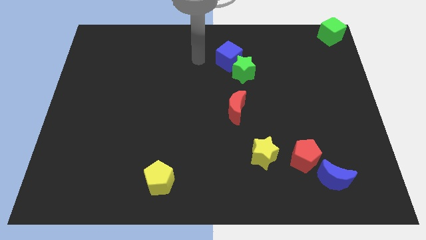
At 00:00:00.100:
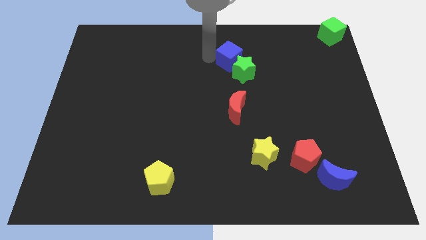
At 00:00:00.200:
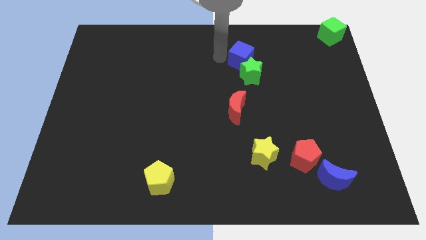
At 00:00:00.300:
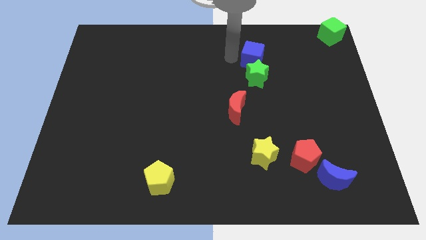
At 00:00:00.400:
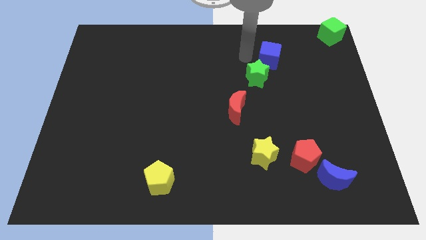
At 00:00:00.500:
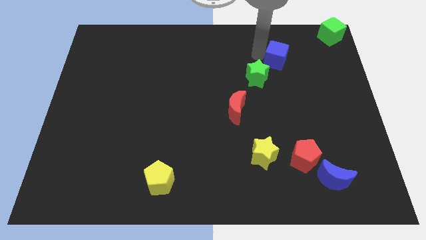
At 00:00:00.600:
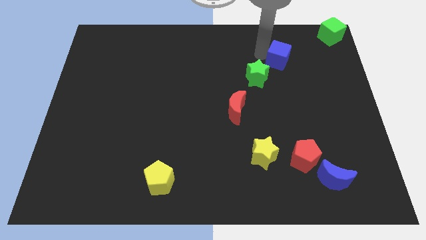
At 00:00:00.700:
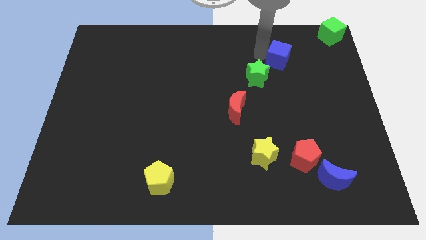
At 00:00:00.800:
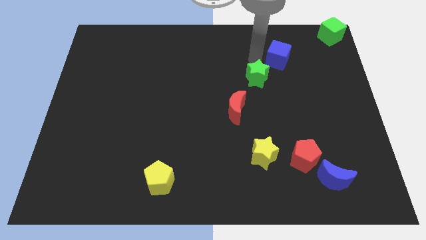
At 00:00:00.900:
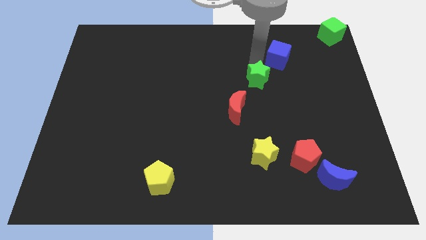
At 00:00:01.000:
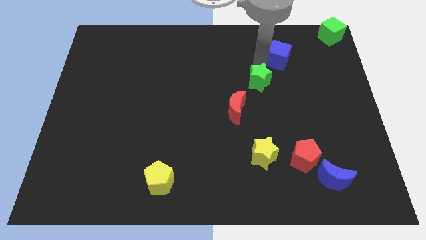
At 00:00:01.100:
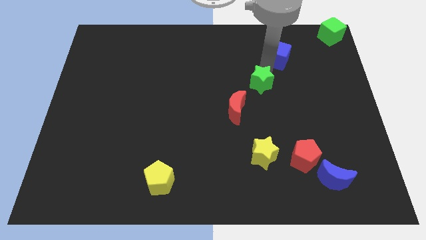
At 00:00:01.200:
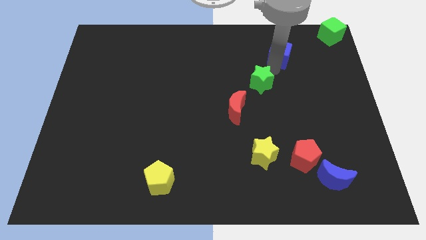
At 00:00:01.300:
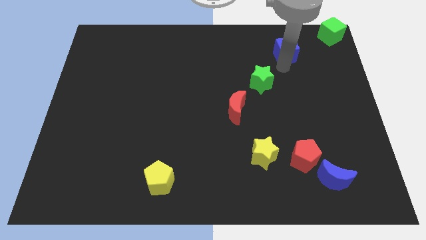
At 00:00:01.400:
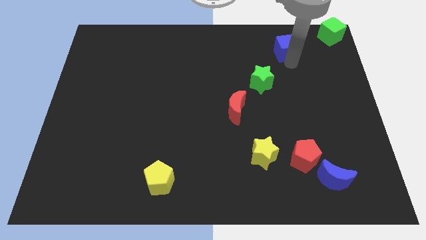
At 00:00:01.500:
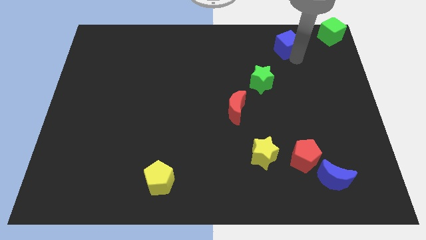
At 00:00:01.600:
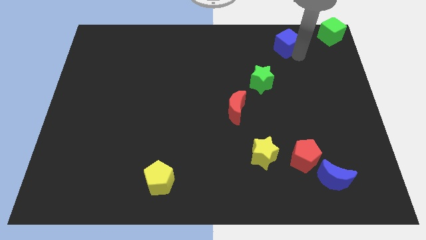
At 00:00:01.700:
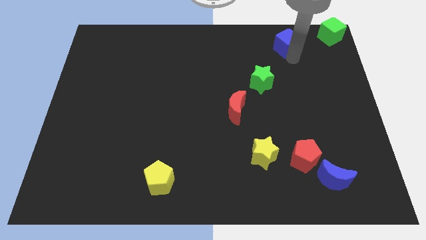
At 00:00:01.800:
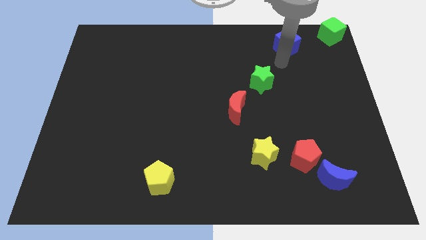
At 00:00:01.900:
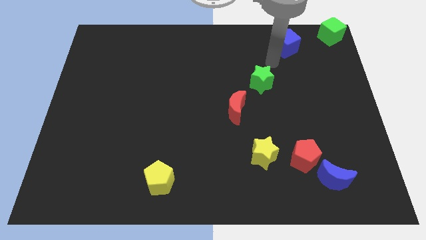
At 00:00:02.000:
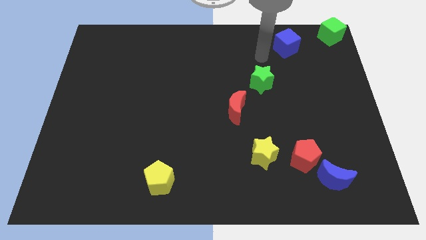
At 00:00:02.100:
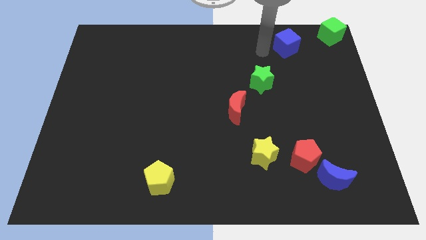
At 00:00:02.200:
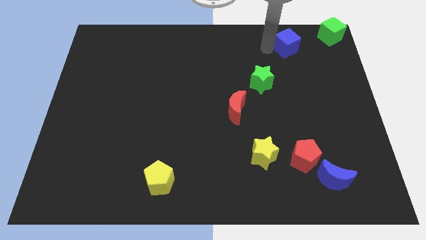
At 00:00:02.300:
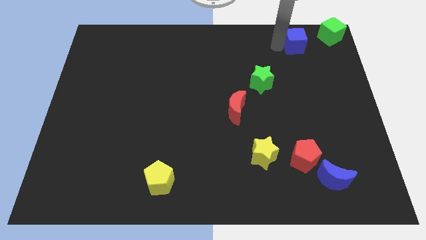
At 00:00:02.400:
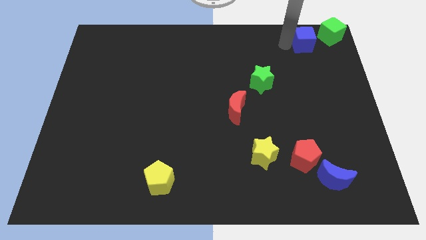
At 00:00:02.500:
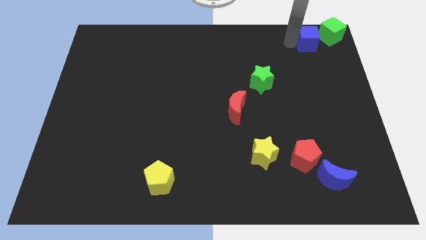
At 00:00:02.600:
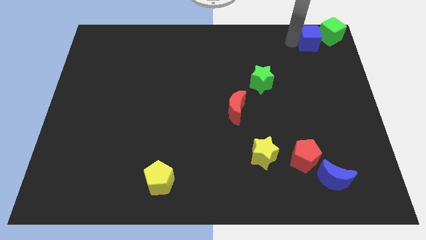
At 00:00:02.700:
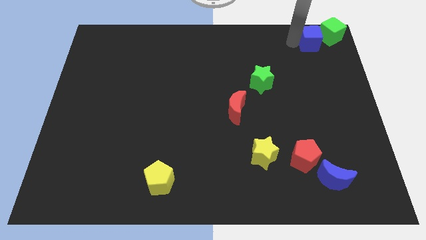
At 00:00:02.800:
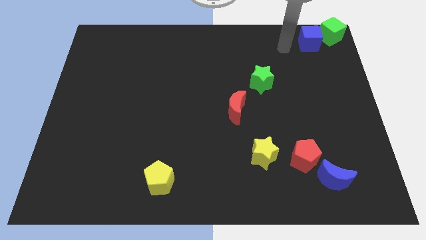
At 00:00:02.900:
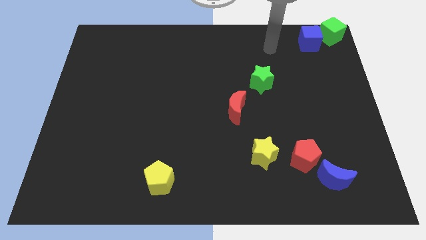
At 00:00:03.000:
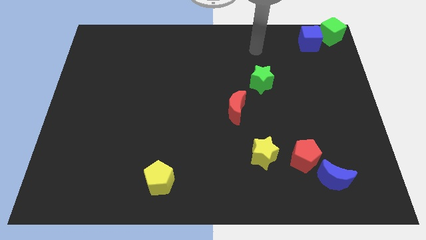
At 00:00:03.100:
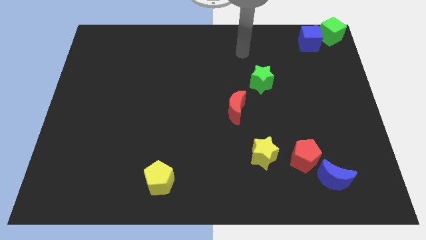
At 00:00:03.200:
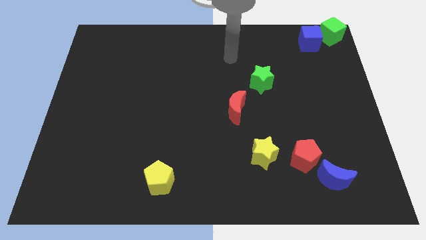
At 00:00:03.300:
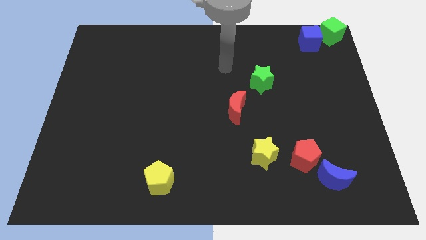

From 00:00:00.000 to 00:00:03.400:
push the blue cube towards the green cube

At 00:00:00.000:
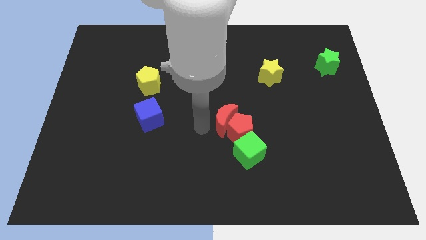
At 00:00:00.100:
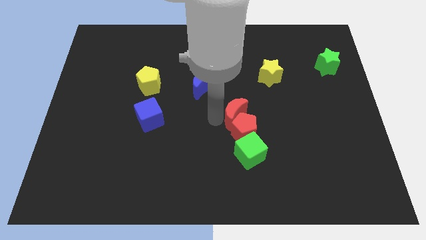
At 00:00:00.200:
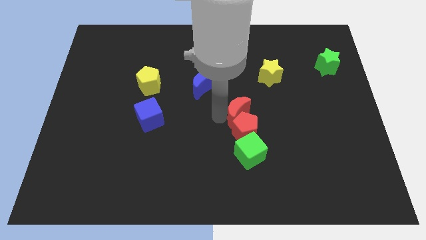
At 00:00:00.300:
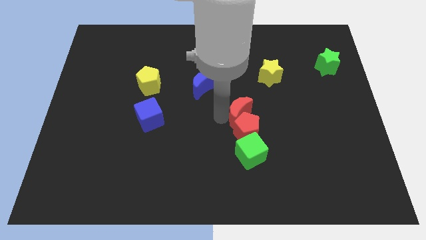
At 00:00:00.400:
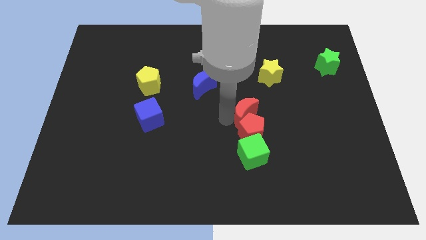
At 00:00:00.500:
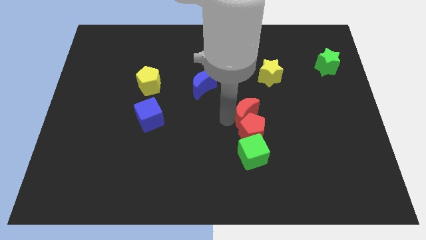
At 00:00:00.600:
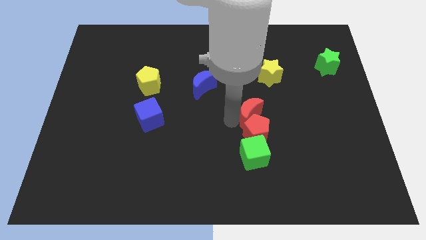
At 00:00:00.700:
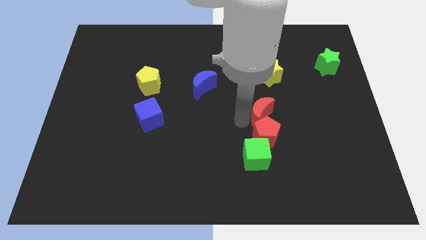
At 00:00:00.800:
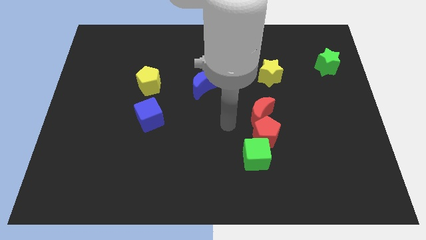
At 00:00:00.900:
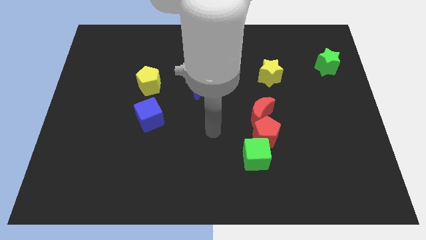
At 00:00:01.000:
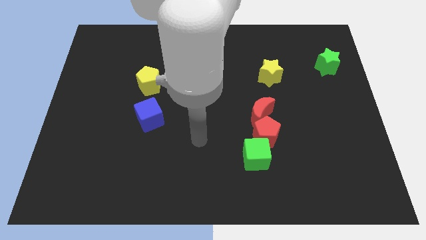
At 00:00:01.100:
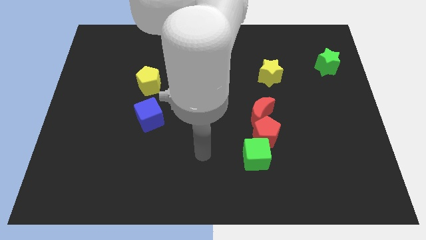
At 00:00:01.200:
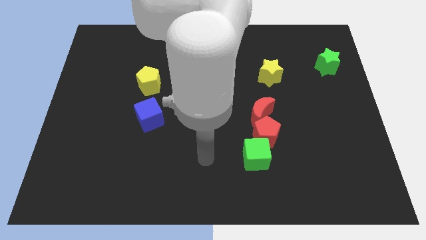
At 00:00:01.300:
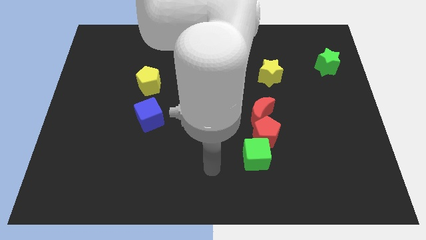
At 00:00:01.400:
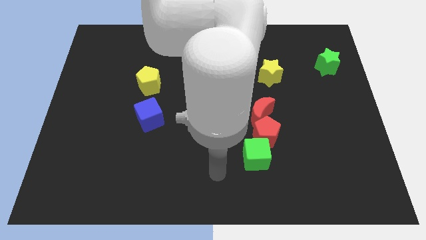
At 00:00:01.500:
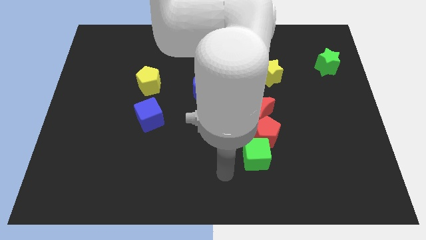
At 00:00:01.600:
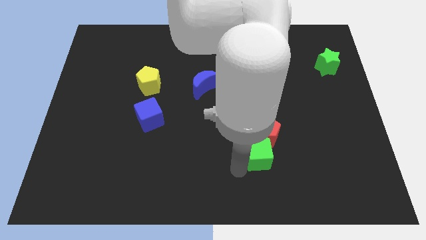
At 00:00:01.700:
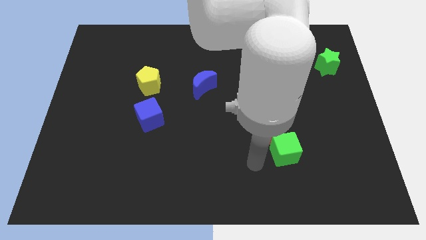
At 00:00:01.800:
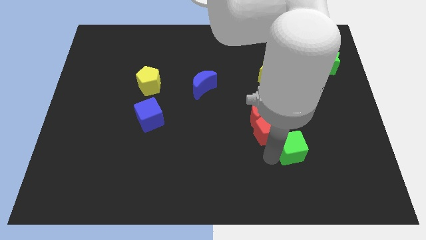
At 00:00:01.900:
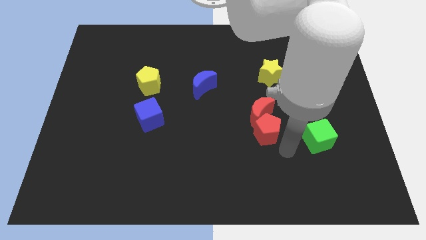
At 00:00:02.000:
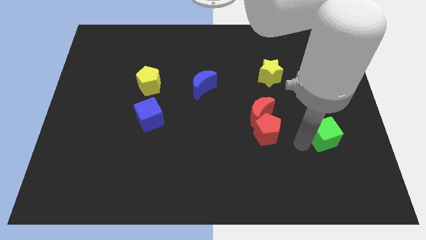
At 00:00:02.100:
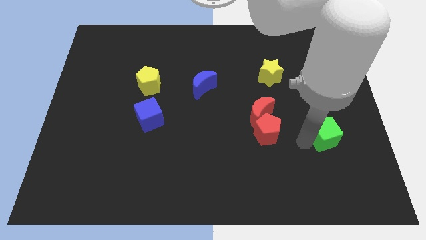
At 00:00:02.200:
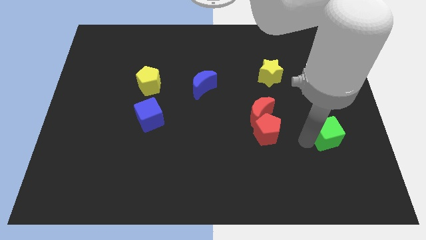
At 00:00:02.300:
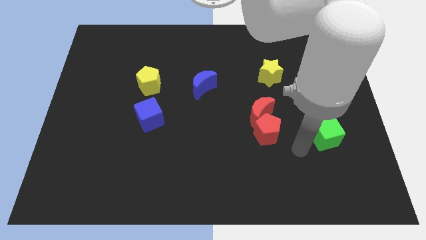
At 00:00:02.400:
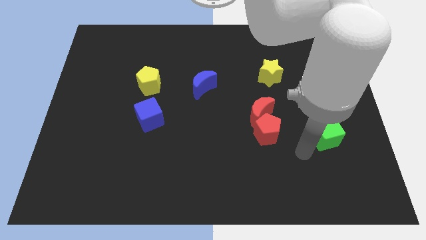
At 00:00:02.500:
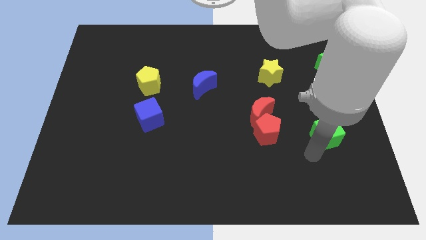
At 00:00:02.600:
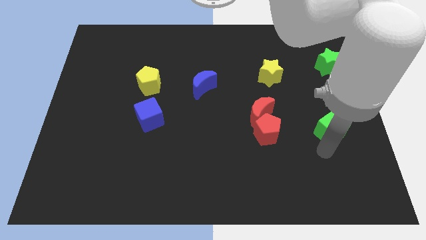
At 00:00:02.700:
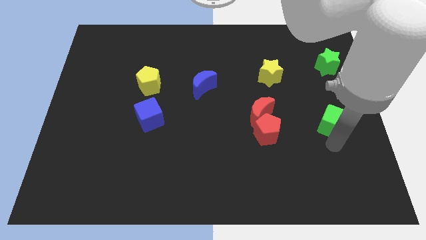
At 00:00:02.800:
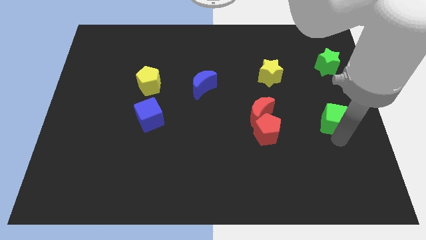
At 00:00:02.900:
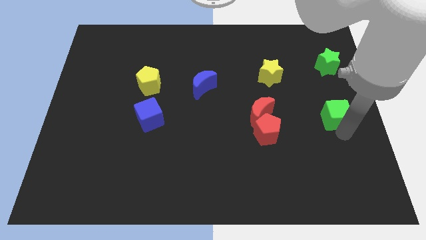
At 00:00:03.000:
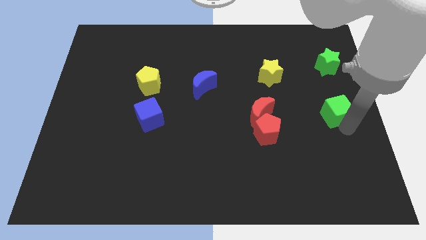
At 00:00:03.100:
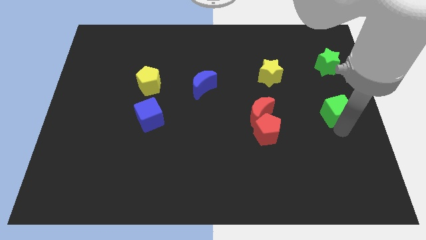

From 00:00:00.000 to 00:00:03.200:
move the green cube slightly to the right center of the board

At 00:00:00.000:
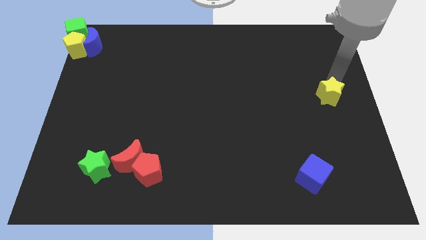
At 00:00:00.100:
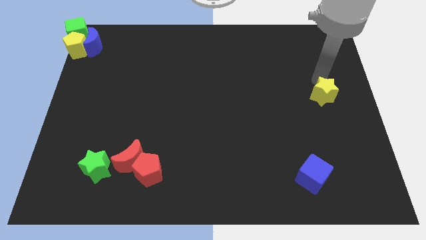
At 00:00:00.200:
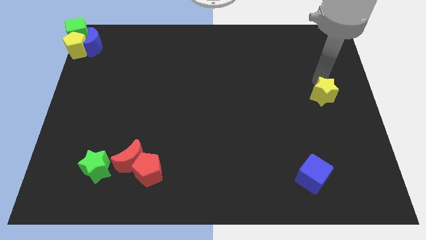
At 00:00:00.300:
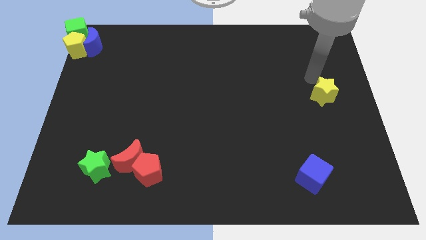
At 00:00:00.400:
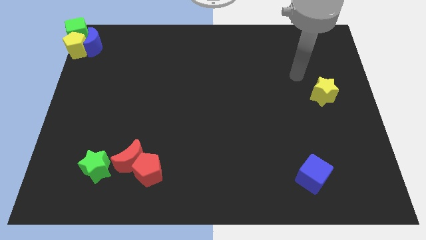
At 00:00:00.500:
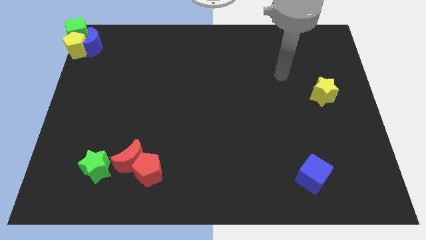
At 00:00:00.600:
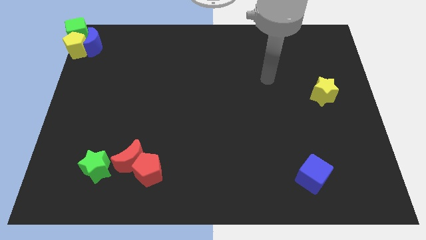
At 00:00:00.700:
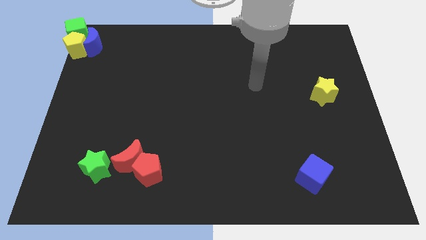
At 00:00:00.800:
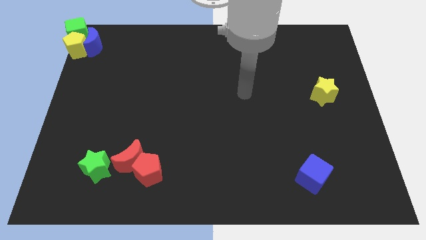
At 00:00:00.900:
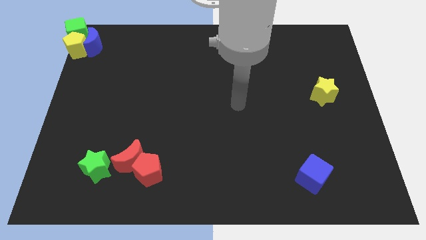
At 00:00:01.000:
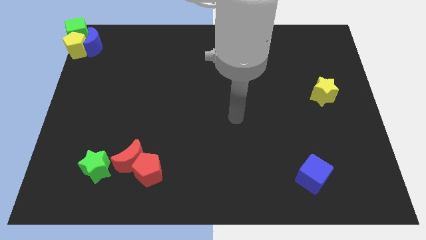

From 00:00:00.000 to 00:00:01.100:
touch the top side of the yellow star

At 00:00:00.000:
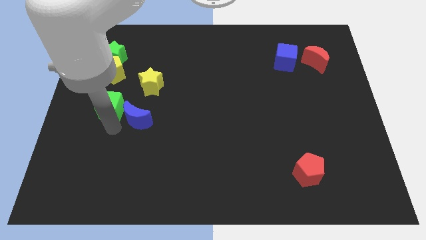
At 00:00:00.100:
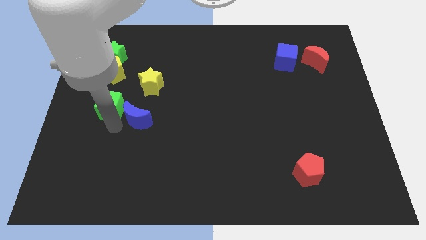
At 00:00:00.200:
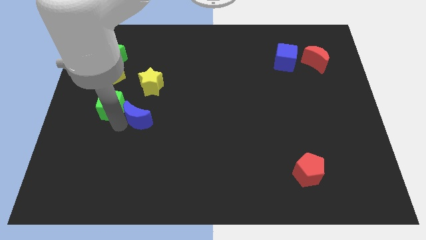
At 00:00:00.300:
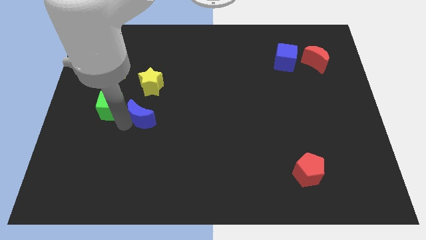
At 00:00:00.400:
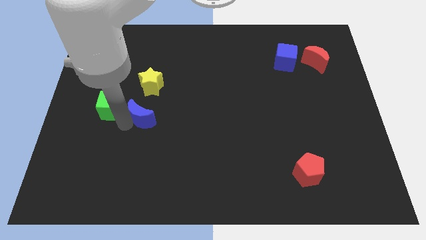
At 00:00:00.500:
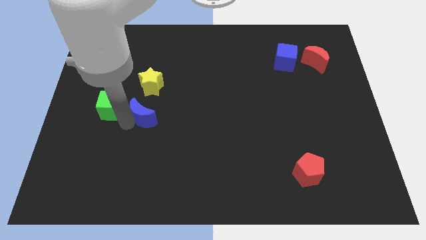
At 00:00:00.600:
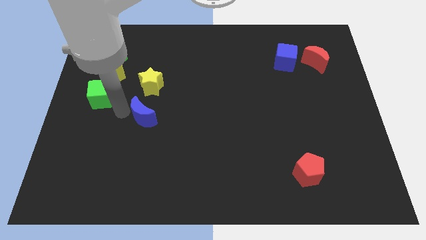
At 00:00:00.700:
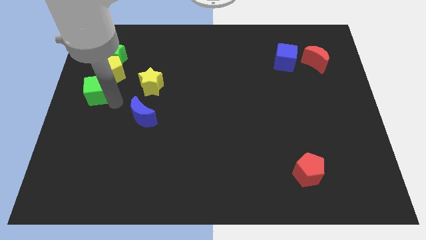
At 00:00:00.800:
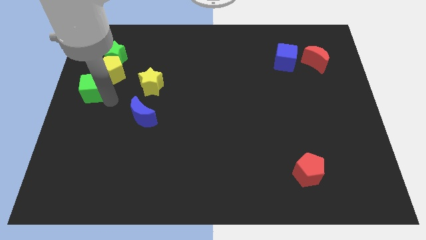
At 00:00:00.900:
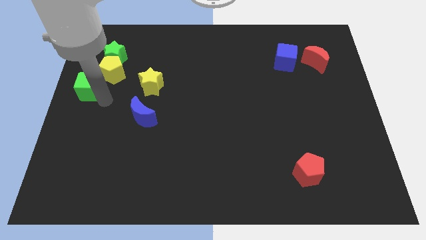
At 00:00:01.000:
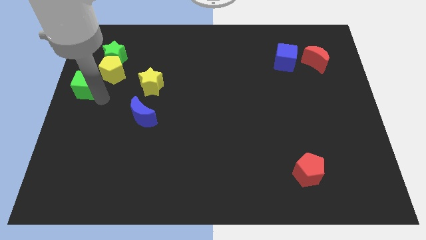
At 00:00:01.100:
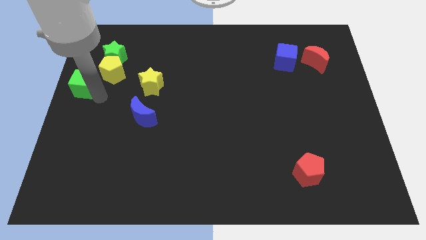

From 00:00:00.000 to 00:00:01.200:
separate green cube and the blue moon
